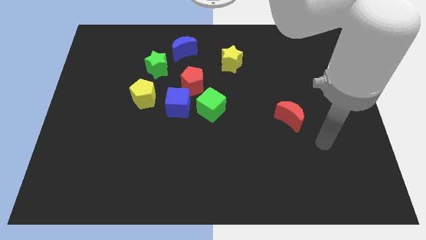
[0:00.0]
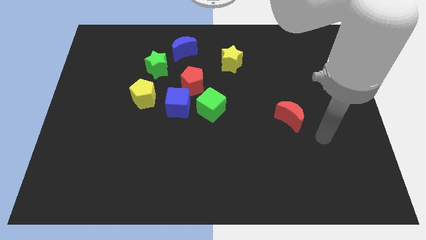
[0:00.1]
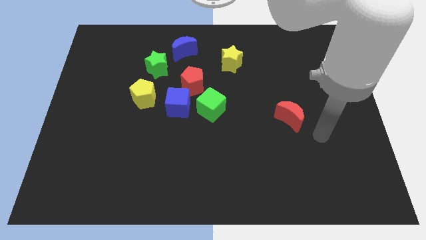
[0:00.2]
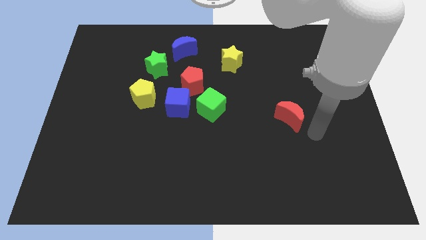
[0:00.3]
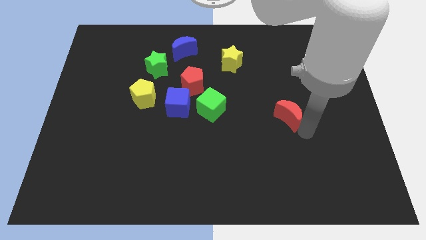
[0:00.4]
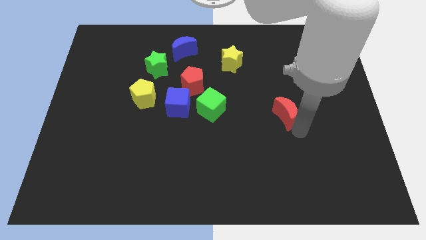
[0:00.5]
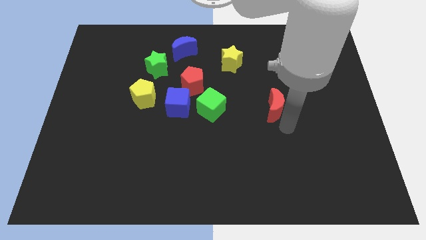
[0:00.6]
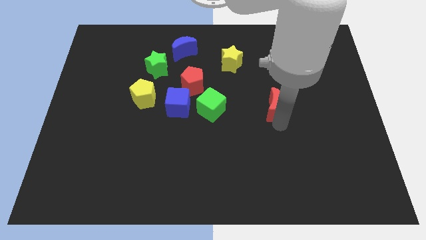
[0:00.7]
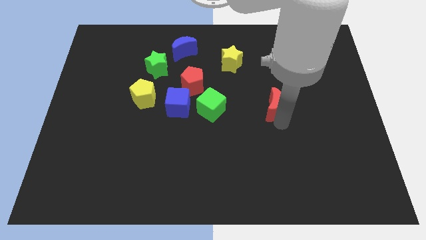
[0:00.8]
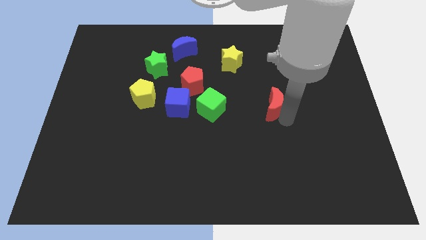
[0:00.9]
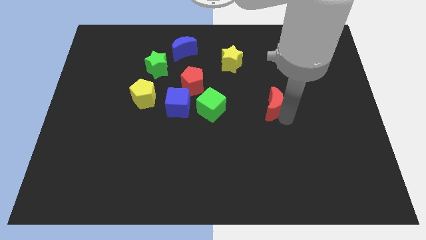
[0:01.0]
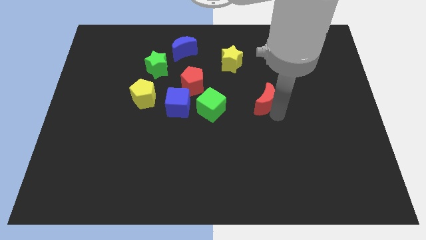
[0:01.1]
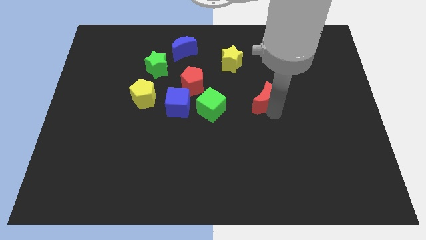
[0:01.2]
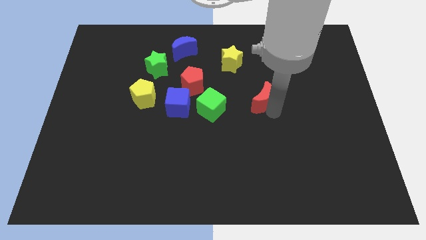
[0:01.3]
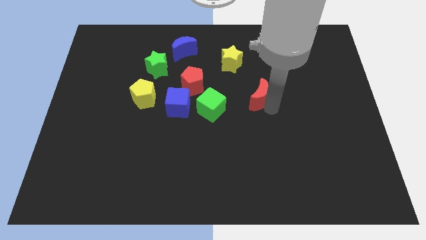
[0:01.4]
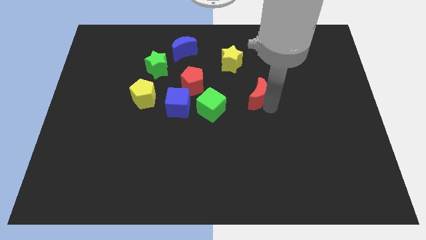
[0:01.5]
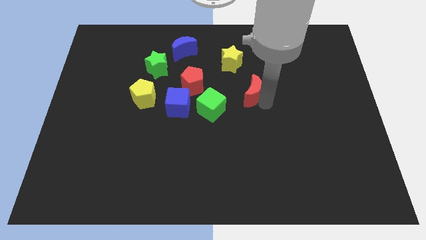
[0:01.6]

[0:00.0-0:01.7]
place the red moon diagonal to the green cube

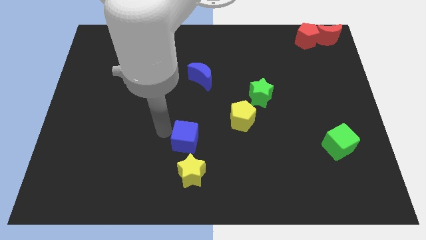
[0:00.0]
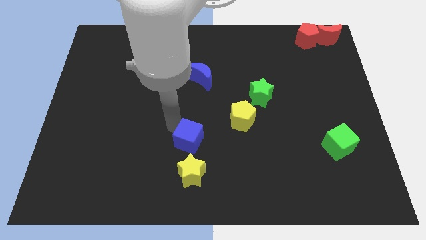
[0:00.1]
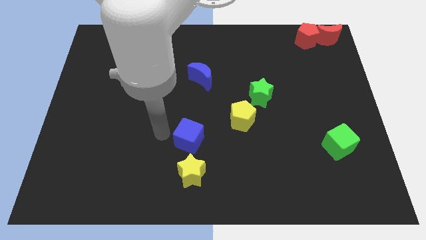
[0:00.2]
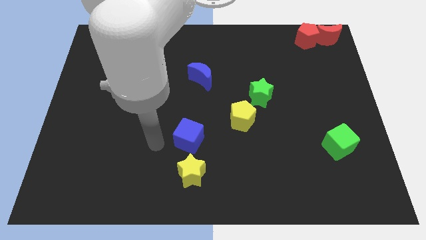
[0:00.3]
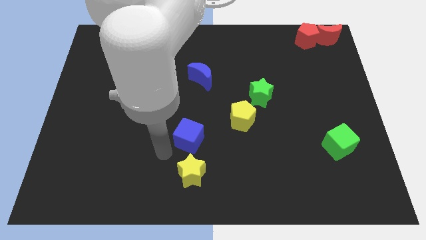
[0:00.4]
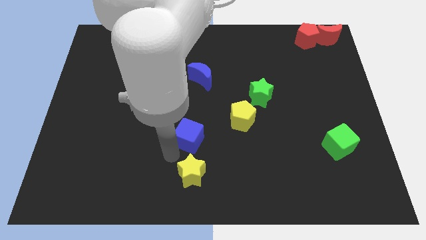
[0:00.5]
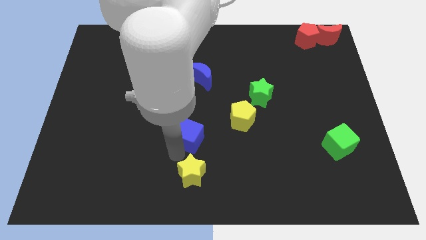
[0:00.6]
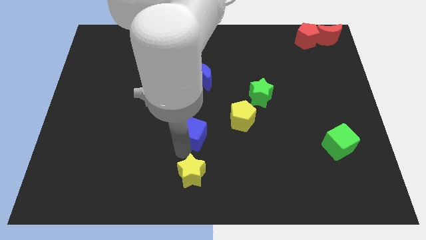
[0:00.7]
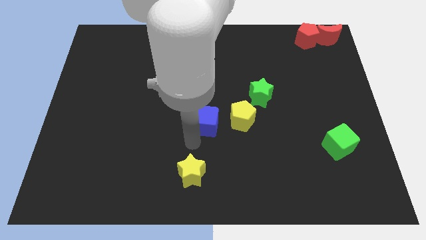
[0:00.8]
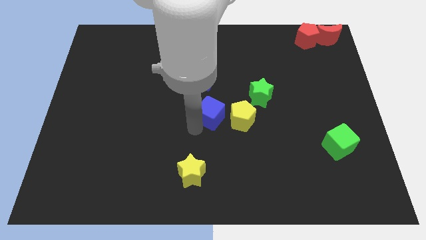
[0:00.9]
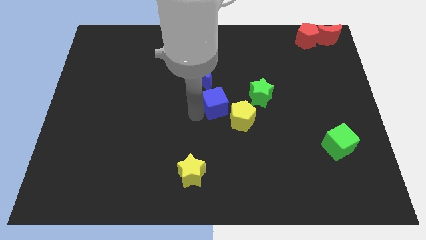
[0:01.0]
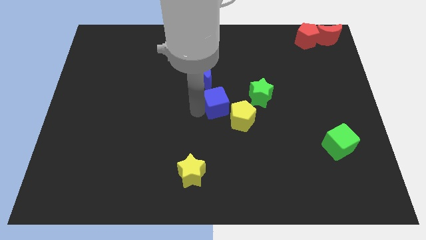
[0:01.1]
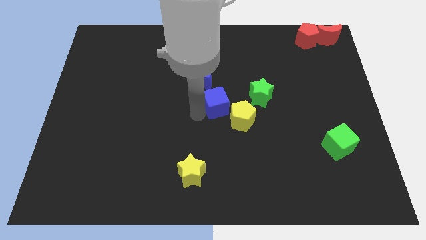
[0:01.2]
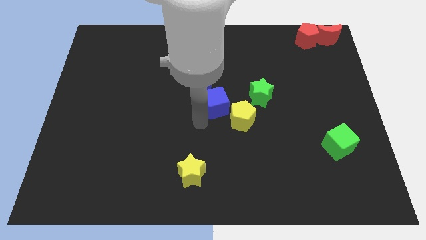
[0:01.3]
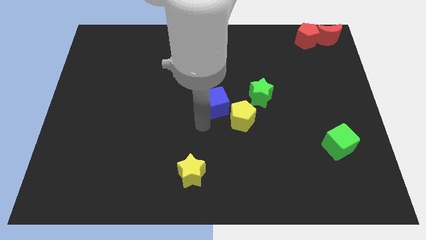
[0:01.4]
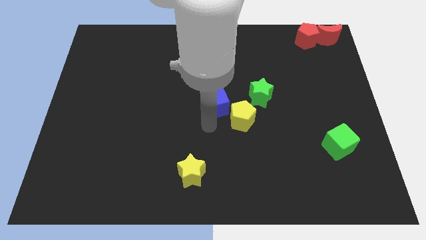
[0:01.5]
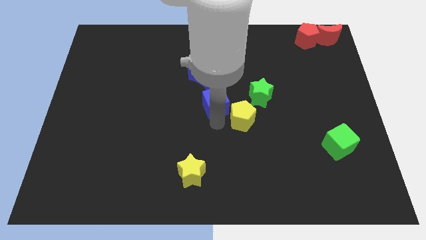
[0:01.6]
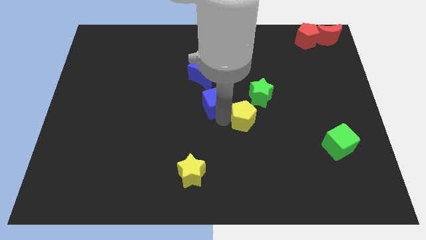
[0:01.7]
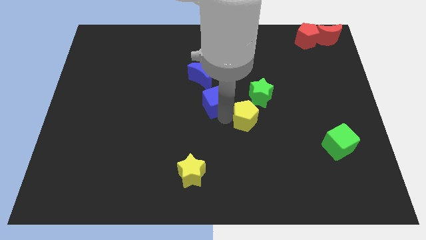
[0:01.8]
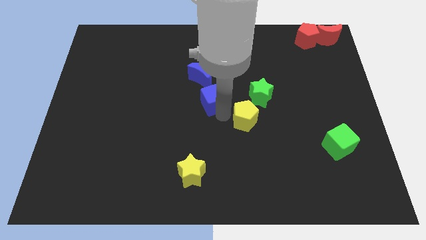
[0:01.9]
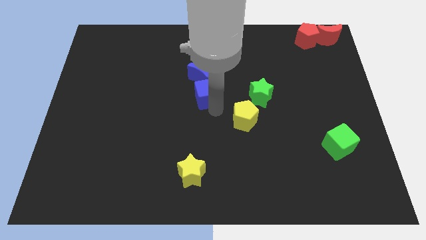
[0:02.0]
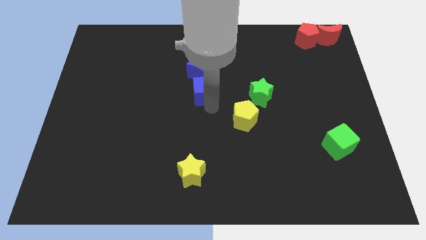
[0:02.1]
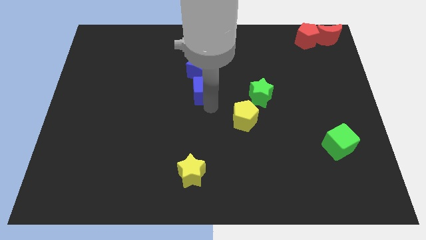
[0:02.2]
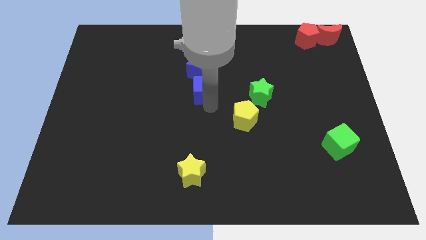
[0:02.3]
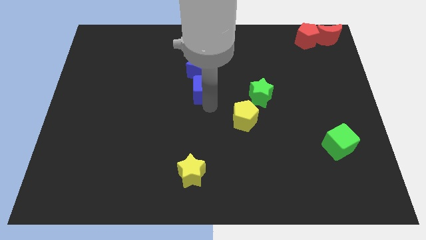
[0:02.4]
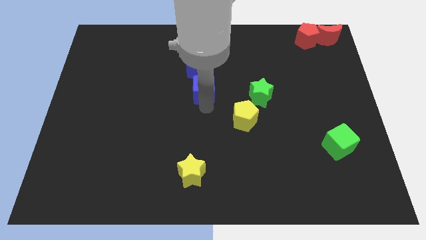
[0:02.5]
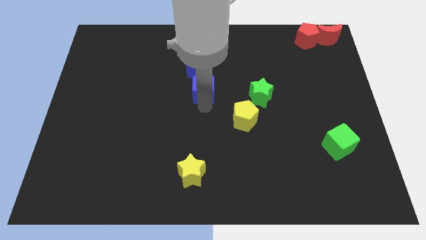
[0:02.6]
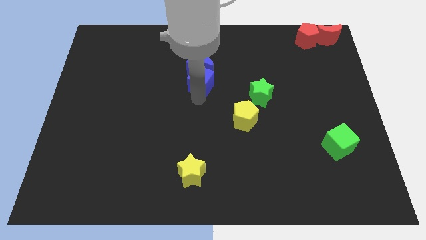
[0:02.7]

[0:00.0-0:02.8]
move blue cube below the blue moon

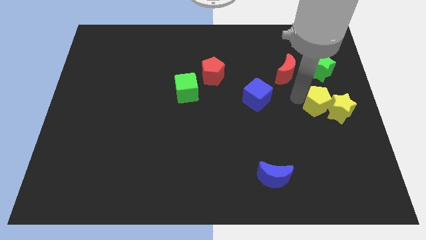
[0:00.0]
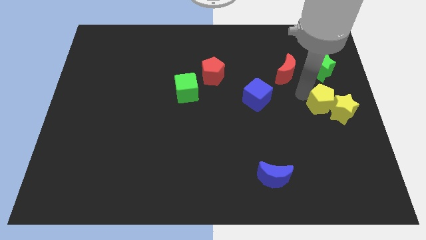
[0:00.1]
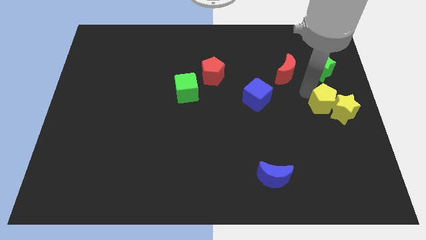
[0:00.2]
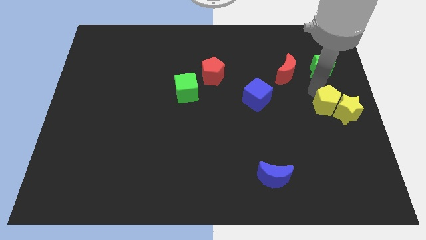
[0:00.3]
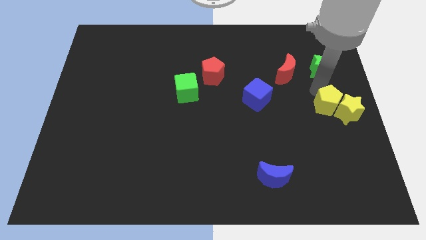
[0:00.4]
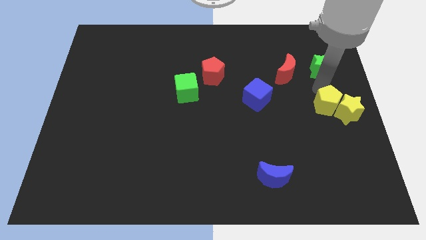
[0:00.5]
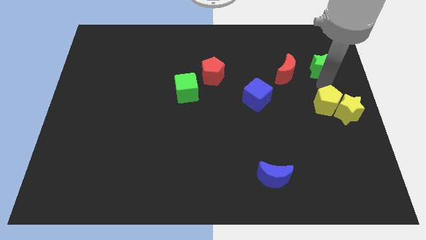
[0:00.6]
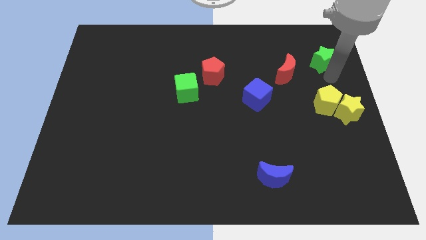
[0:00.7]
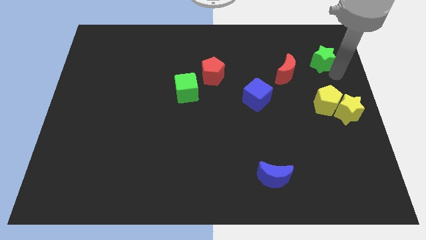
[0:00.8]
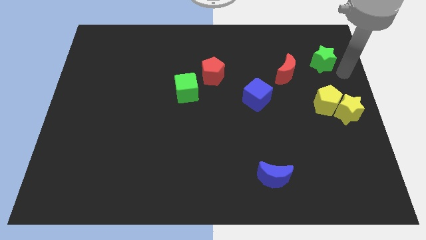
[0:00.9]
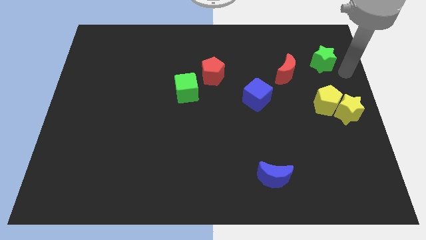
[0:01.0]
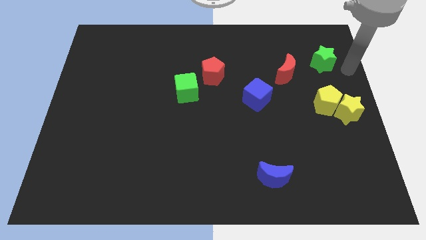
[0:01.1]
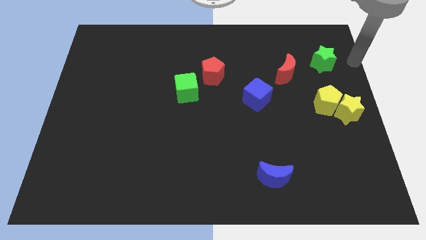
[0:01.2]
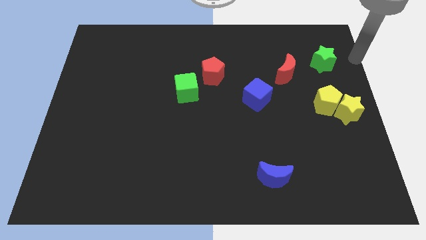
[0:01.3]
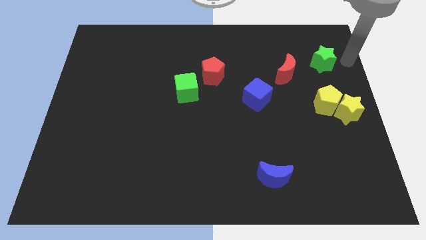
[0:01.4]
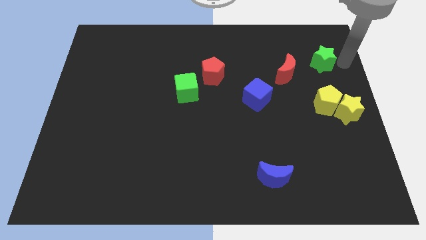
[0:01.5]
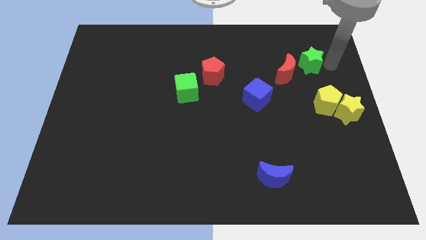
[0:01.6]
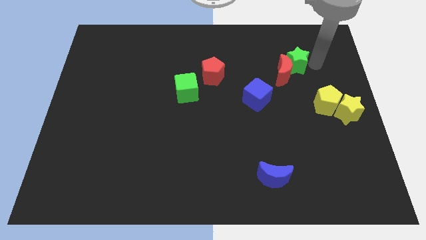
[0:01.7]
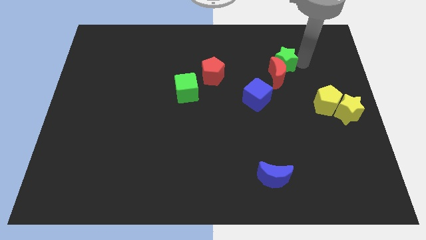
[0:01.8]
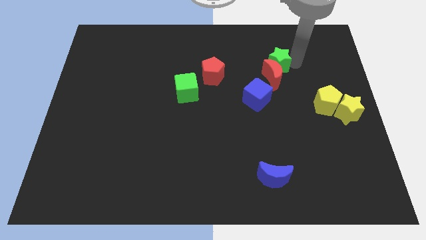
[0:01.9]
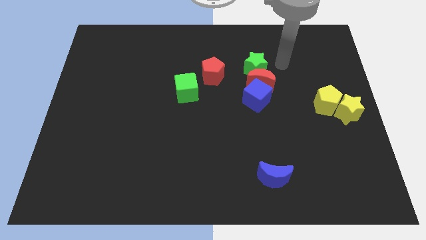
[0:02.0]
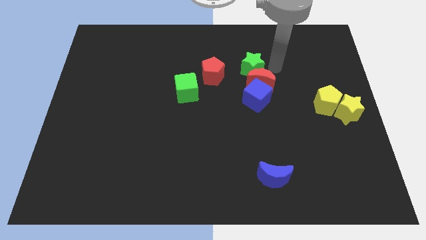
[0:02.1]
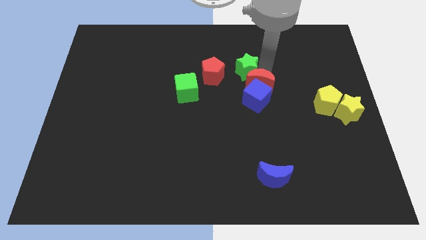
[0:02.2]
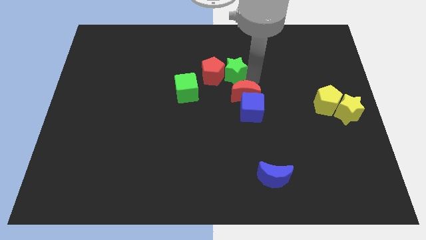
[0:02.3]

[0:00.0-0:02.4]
move the green star to the top of the red crescent

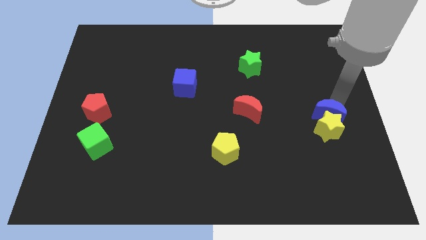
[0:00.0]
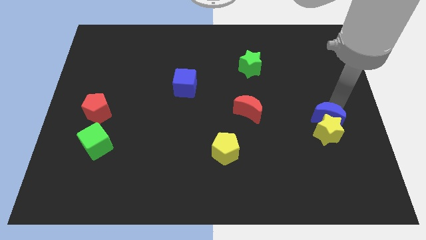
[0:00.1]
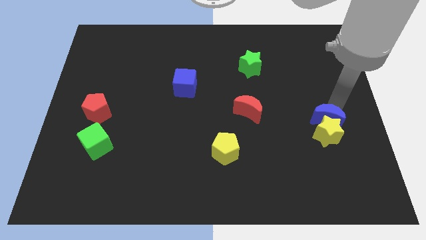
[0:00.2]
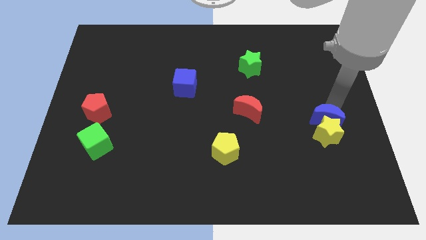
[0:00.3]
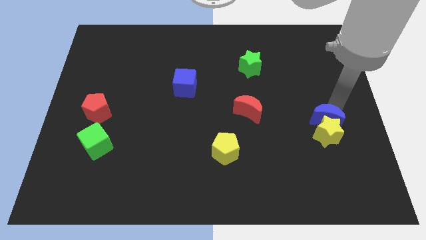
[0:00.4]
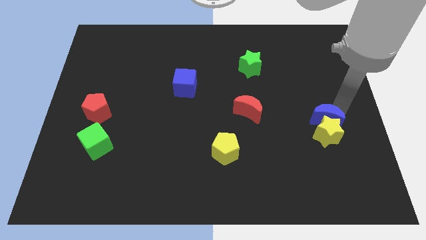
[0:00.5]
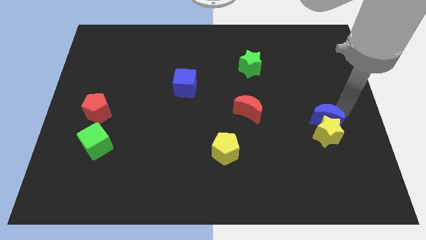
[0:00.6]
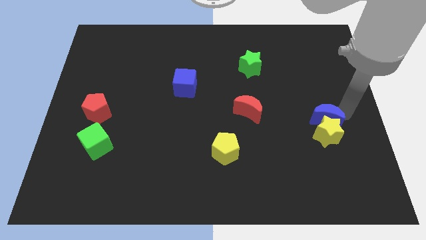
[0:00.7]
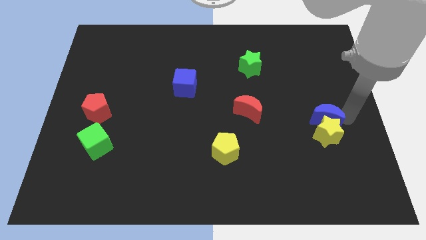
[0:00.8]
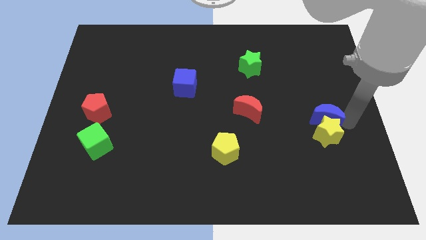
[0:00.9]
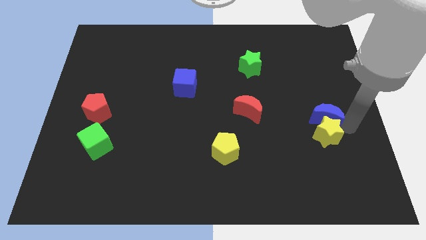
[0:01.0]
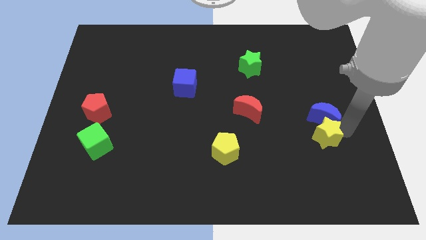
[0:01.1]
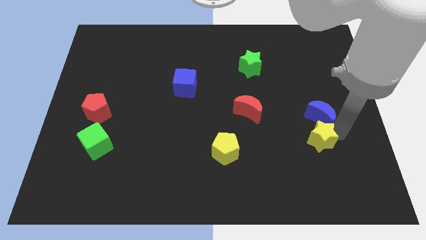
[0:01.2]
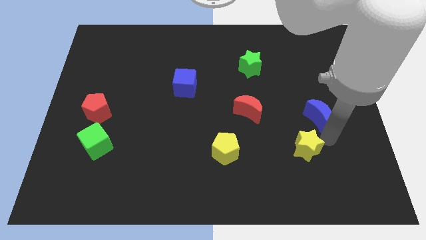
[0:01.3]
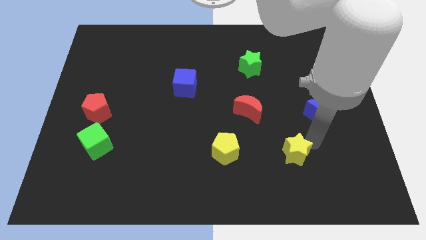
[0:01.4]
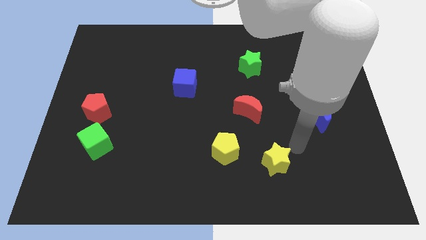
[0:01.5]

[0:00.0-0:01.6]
separate the yellow star from the blue moon

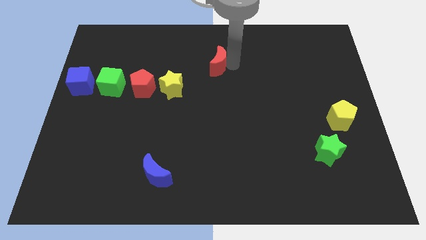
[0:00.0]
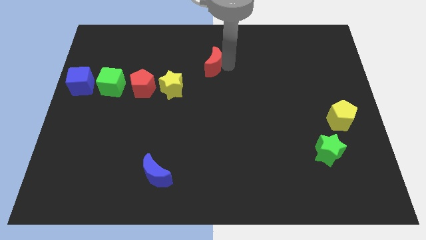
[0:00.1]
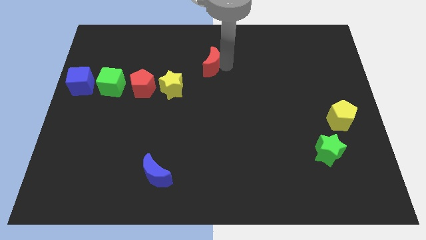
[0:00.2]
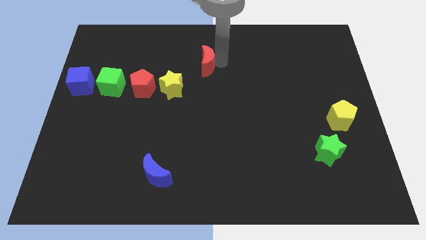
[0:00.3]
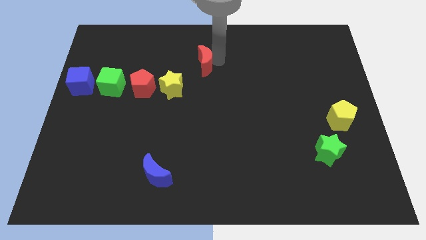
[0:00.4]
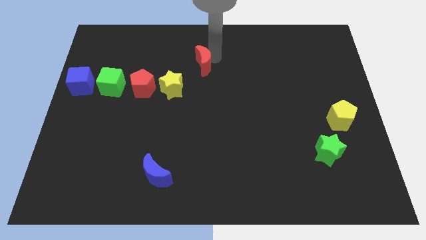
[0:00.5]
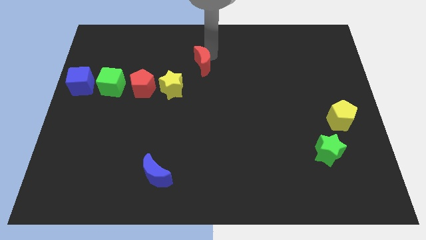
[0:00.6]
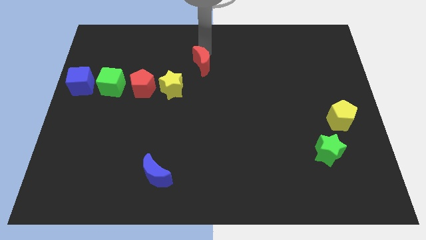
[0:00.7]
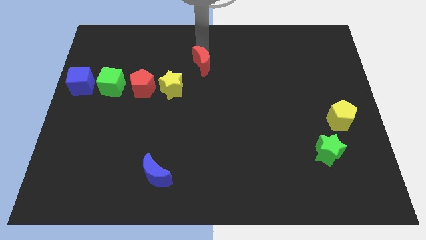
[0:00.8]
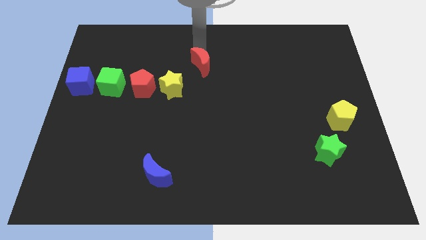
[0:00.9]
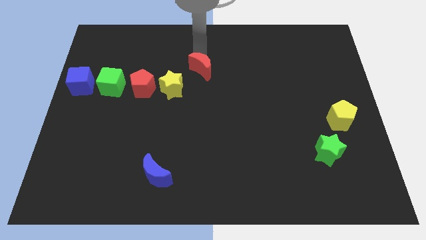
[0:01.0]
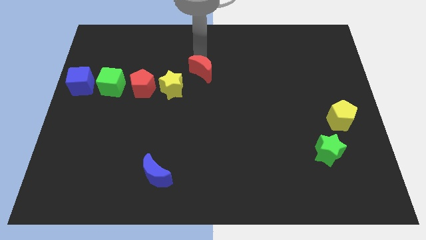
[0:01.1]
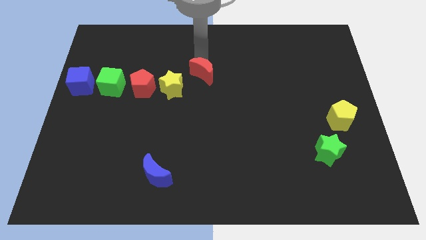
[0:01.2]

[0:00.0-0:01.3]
move the red crescent diagonally to the yellow star
